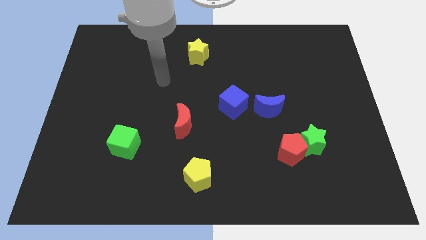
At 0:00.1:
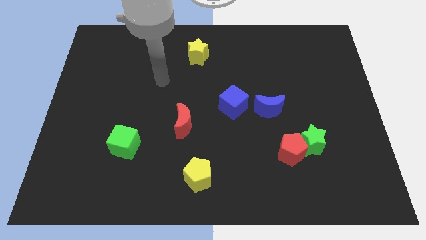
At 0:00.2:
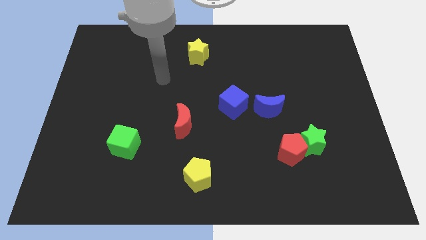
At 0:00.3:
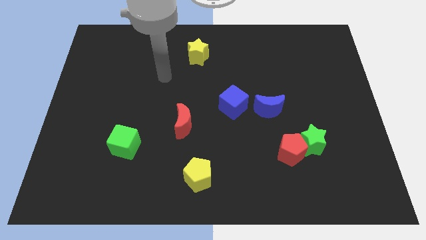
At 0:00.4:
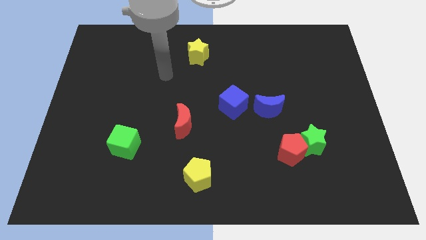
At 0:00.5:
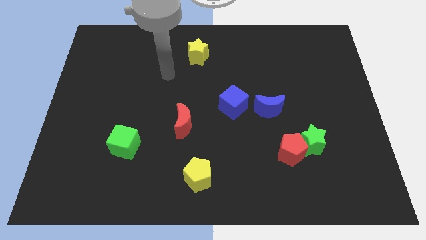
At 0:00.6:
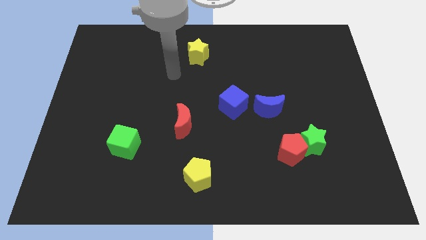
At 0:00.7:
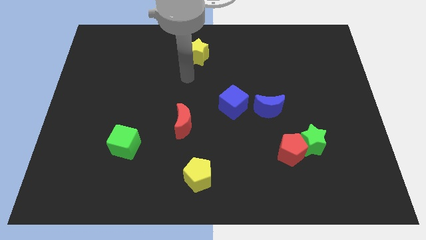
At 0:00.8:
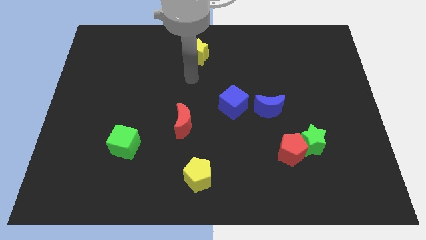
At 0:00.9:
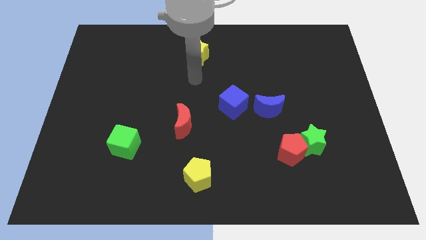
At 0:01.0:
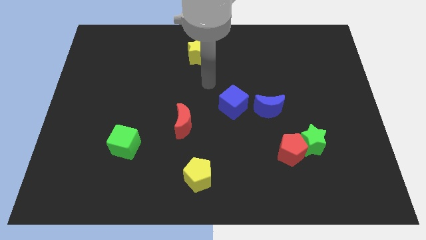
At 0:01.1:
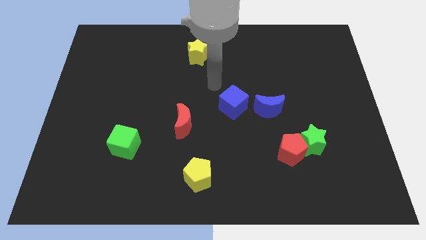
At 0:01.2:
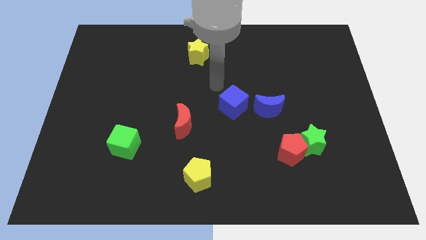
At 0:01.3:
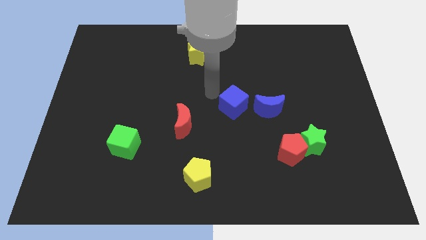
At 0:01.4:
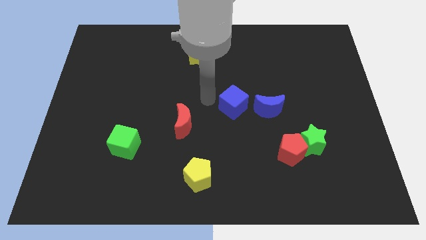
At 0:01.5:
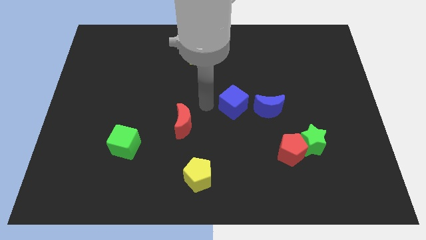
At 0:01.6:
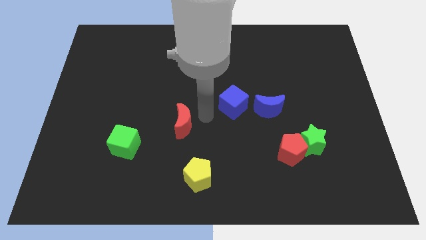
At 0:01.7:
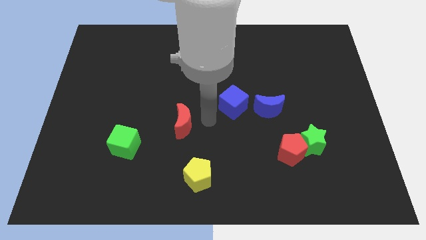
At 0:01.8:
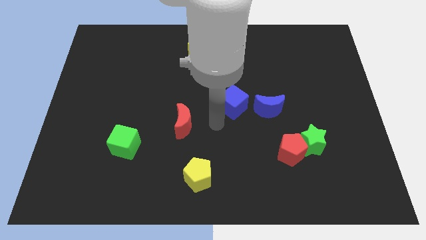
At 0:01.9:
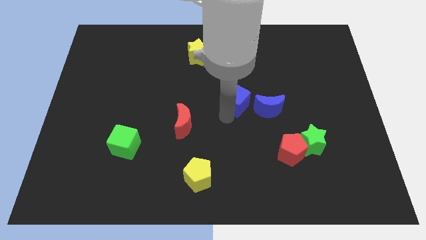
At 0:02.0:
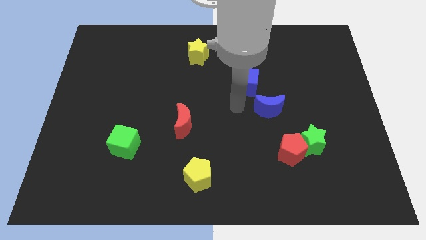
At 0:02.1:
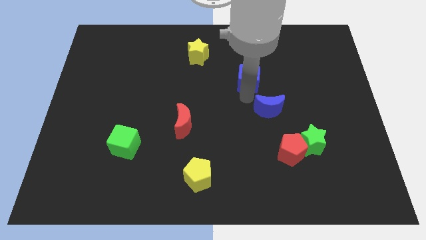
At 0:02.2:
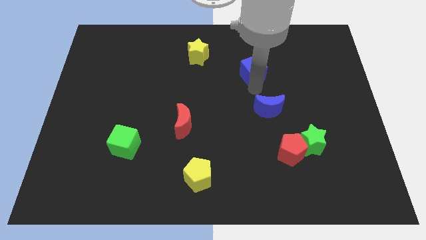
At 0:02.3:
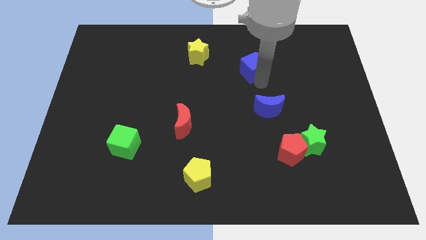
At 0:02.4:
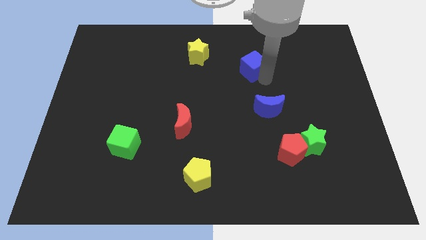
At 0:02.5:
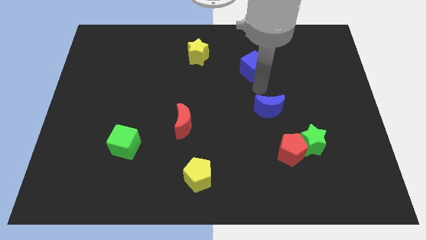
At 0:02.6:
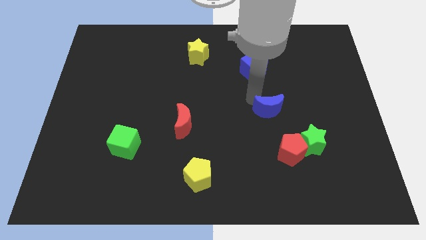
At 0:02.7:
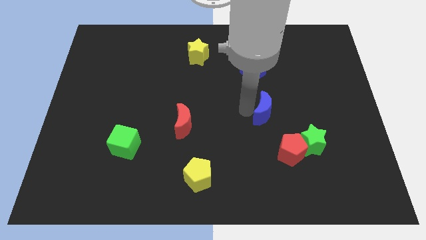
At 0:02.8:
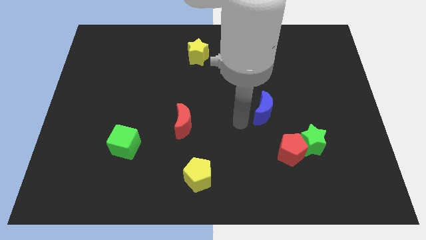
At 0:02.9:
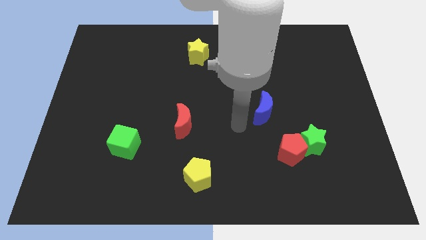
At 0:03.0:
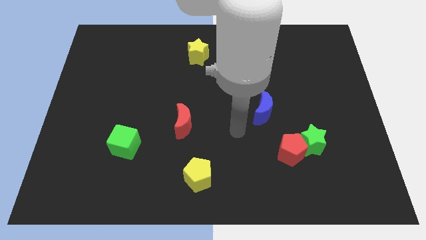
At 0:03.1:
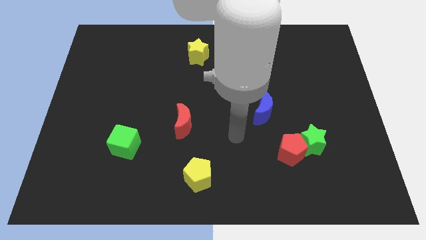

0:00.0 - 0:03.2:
place the blue cube vertically above the blue moon

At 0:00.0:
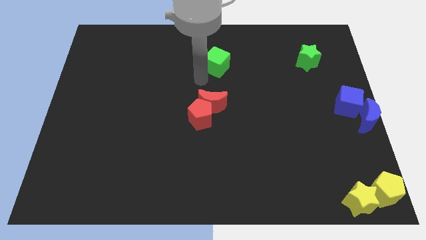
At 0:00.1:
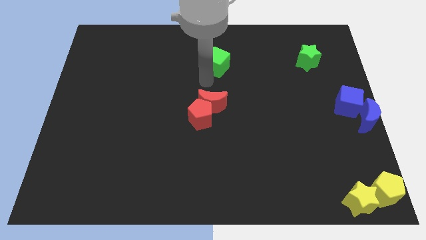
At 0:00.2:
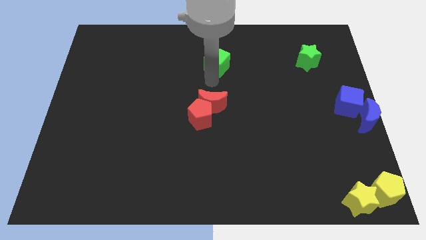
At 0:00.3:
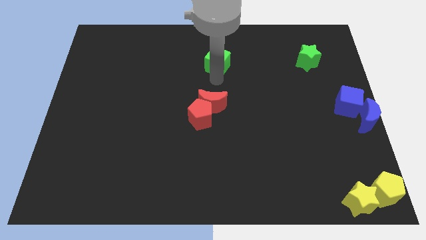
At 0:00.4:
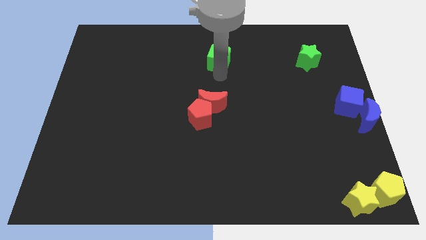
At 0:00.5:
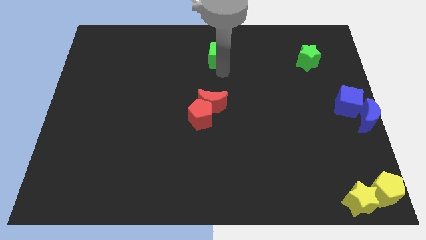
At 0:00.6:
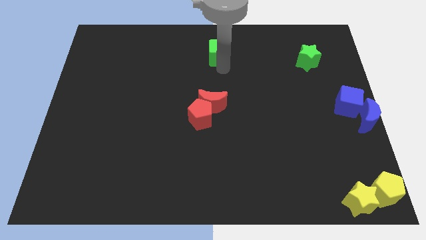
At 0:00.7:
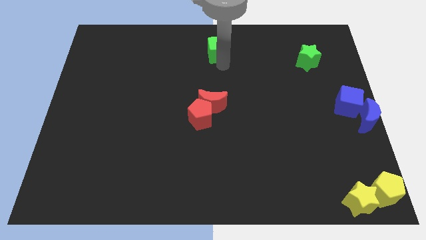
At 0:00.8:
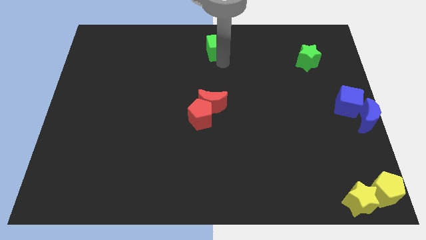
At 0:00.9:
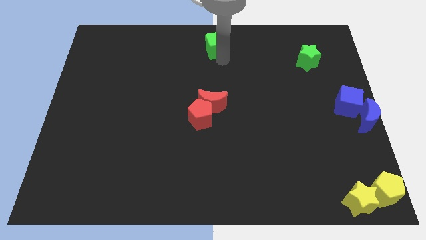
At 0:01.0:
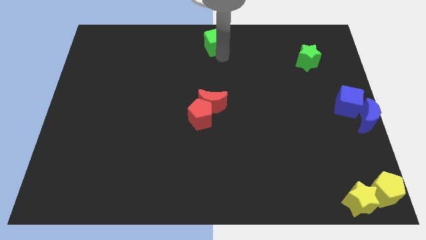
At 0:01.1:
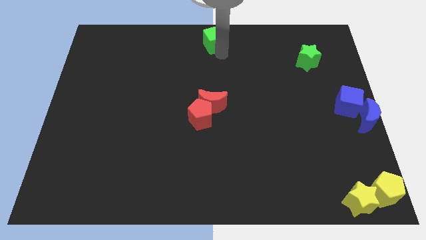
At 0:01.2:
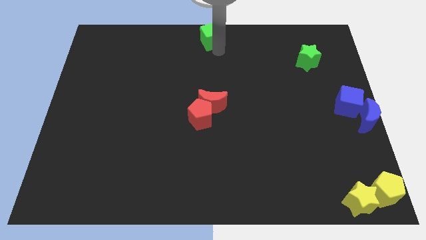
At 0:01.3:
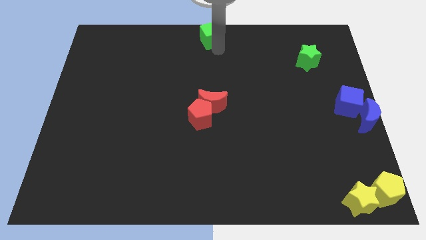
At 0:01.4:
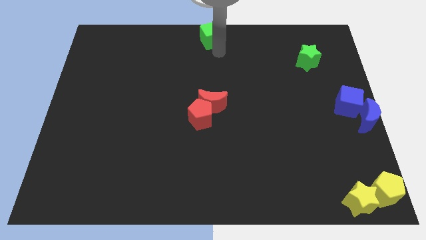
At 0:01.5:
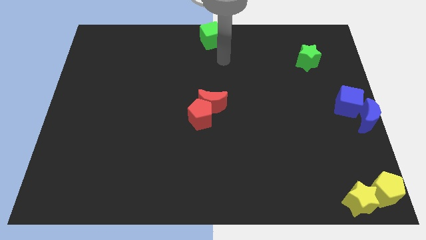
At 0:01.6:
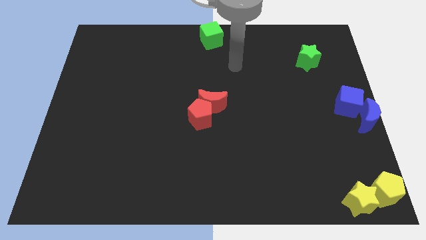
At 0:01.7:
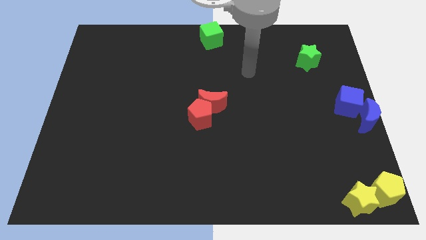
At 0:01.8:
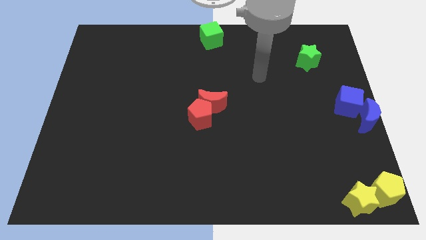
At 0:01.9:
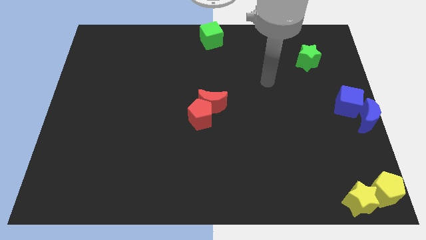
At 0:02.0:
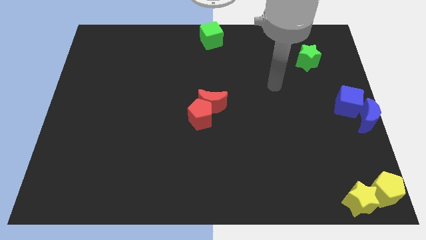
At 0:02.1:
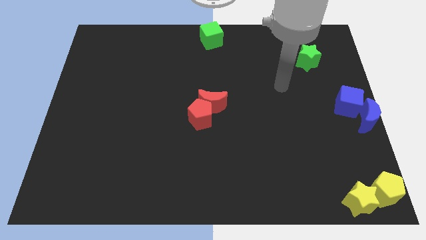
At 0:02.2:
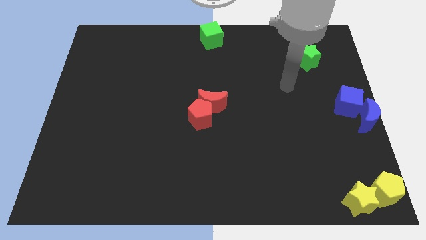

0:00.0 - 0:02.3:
move green cube to the top center of the board

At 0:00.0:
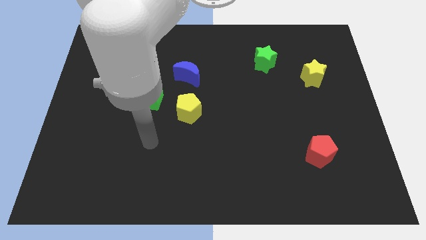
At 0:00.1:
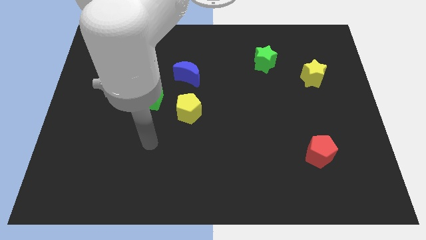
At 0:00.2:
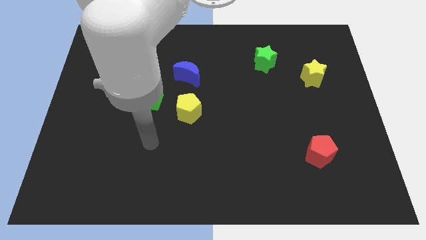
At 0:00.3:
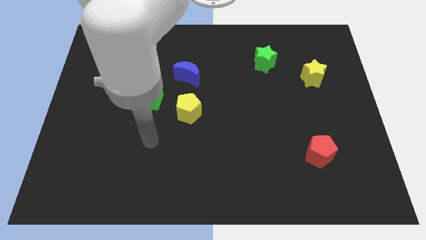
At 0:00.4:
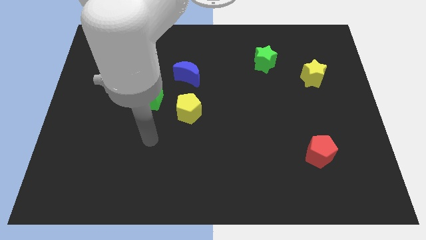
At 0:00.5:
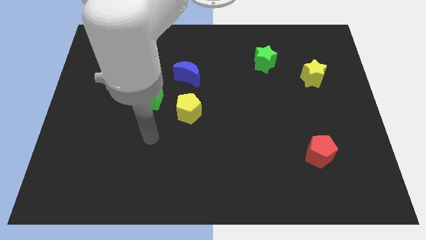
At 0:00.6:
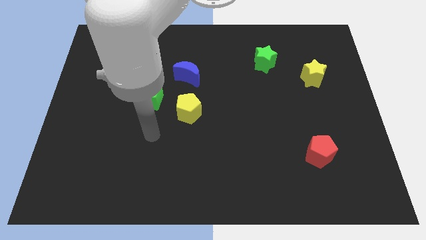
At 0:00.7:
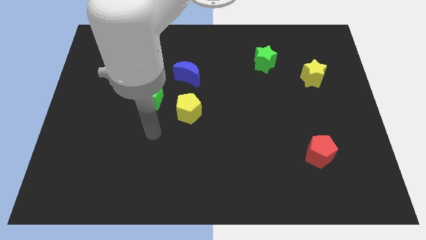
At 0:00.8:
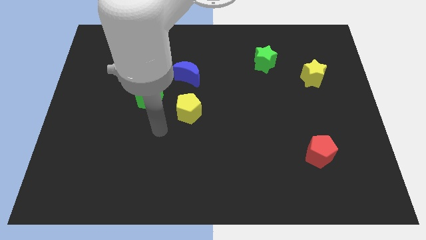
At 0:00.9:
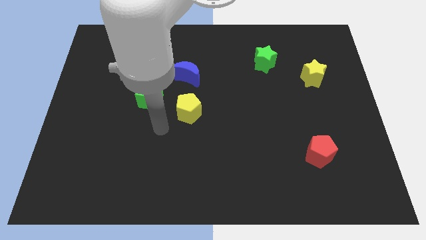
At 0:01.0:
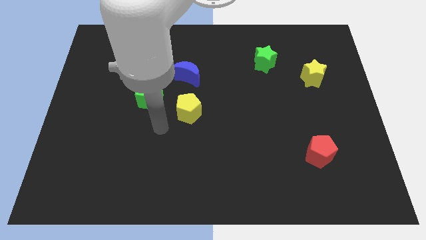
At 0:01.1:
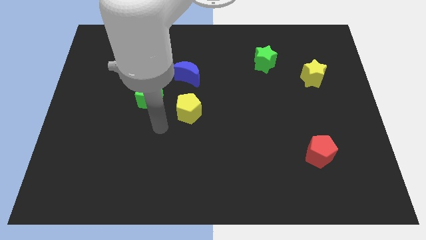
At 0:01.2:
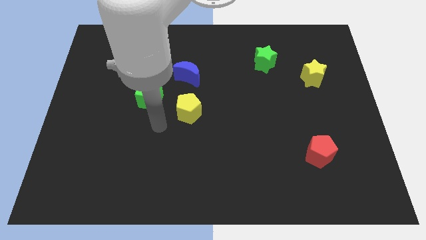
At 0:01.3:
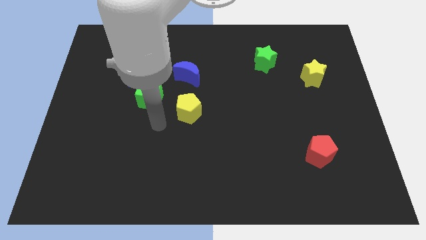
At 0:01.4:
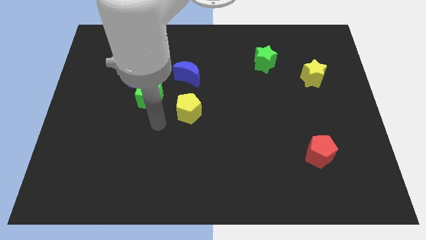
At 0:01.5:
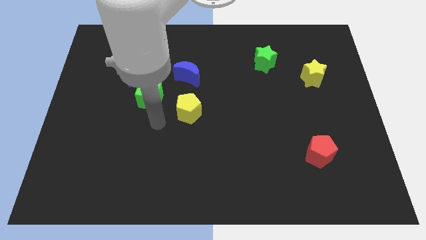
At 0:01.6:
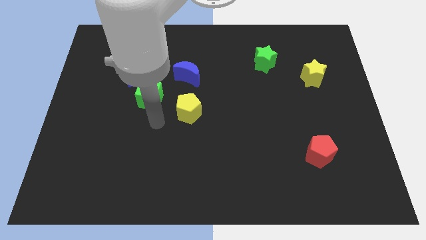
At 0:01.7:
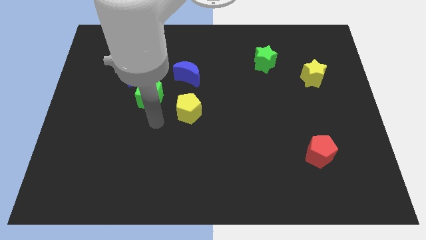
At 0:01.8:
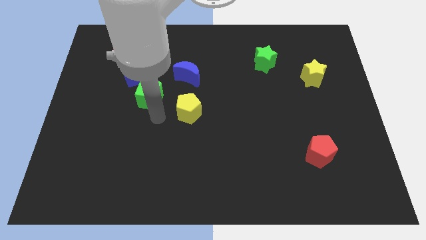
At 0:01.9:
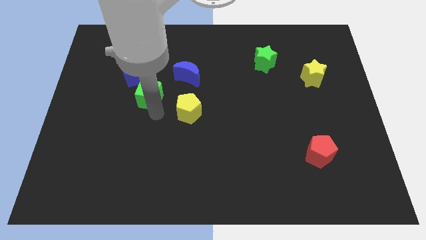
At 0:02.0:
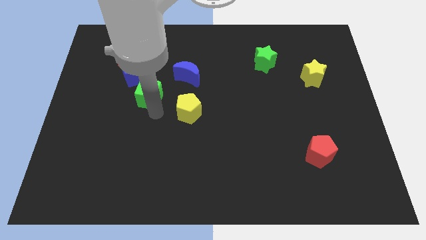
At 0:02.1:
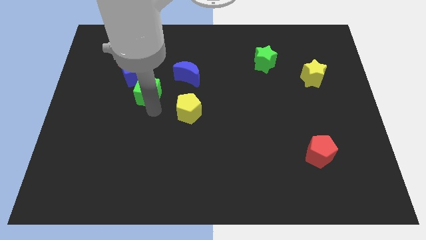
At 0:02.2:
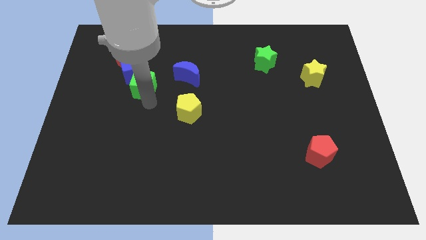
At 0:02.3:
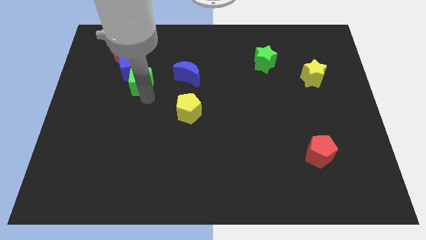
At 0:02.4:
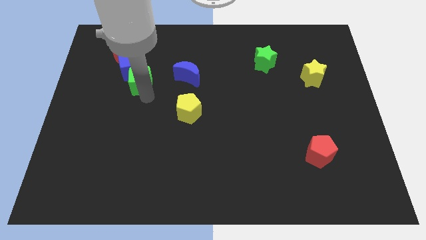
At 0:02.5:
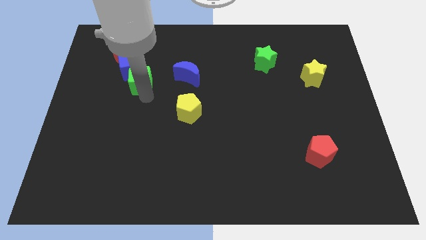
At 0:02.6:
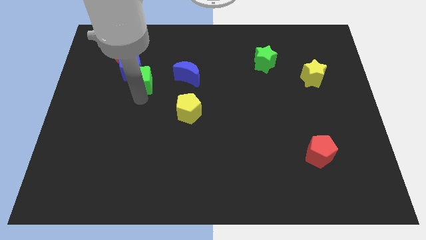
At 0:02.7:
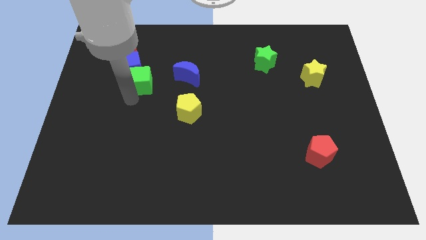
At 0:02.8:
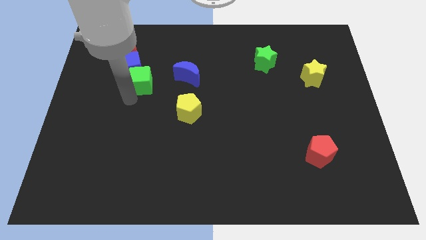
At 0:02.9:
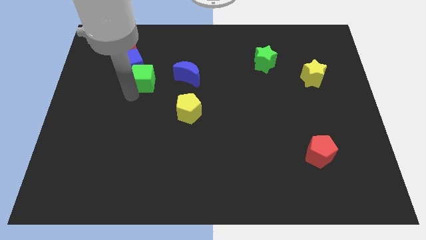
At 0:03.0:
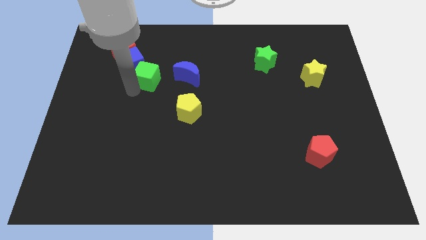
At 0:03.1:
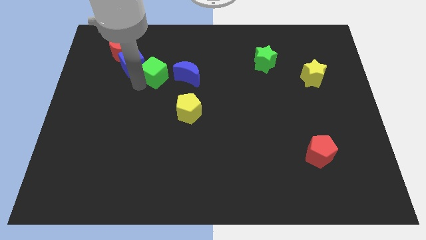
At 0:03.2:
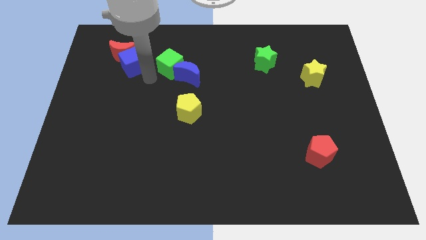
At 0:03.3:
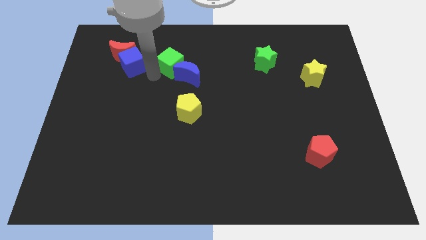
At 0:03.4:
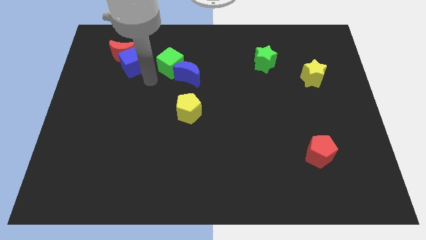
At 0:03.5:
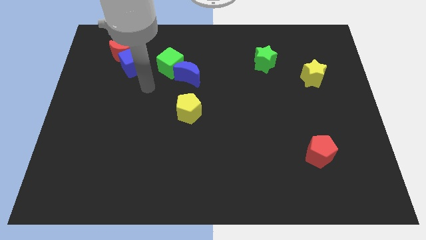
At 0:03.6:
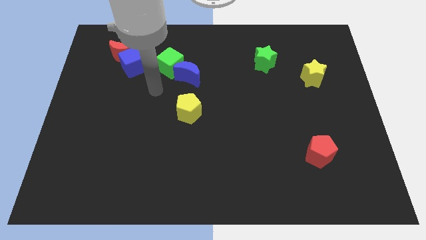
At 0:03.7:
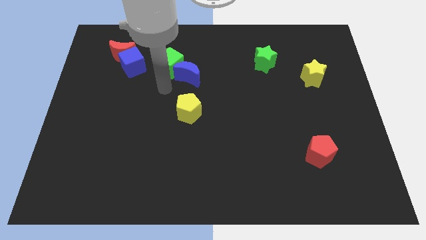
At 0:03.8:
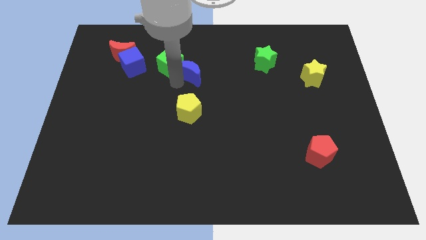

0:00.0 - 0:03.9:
move the green cube upwards the board
